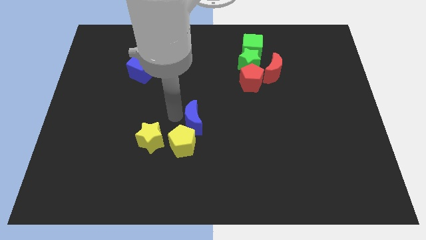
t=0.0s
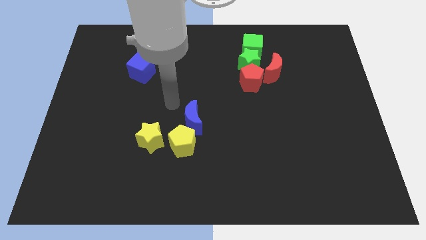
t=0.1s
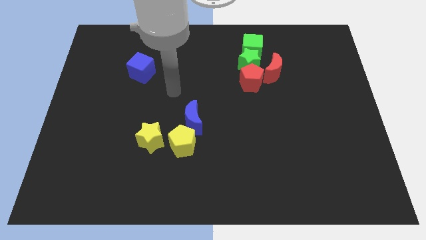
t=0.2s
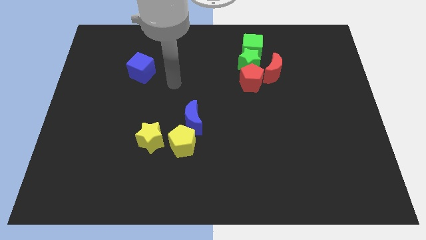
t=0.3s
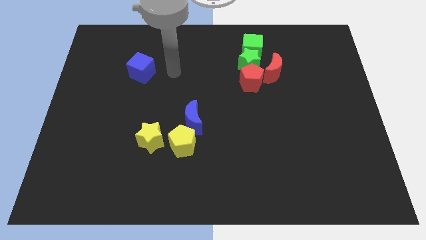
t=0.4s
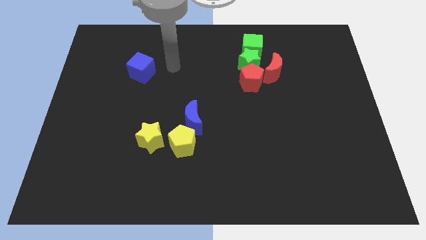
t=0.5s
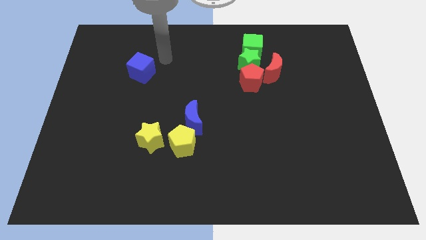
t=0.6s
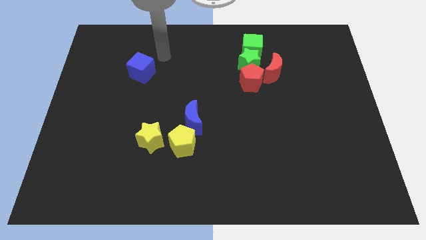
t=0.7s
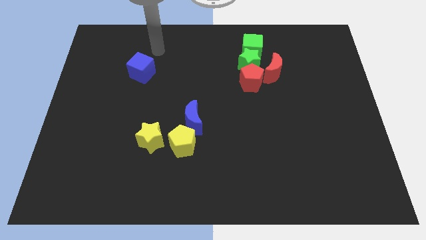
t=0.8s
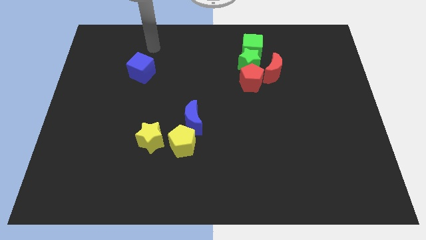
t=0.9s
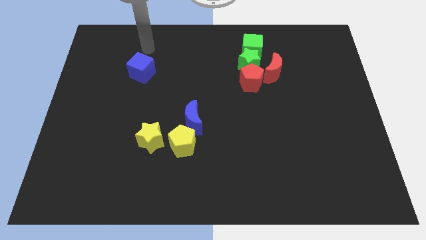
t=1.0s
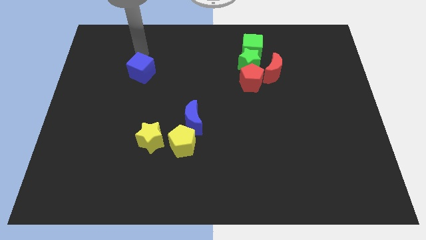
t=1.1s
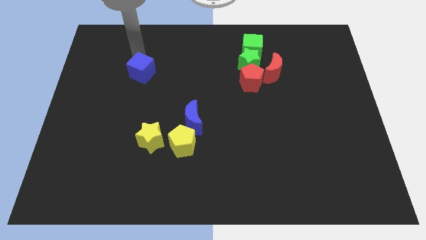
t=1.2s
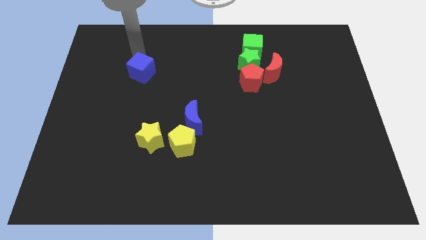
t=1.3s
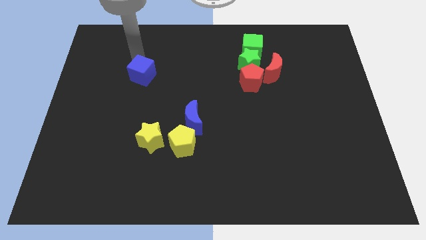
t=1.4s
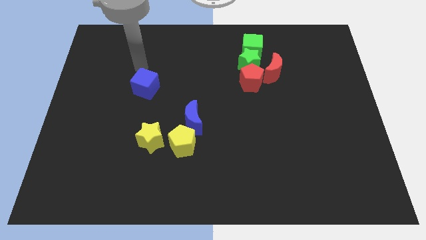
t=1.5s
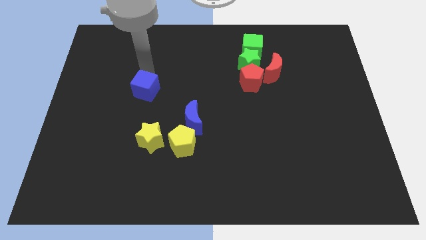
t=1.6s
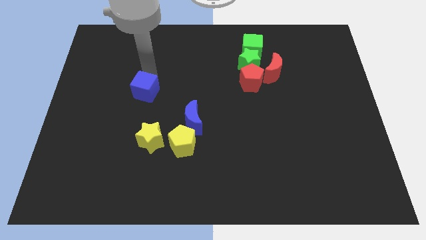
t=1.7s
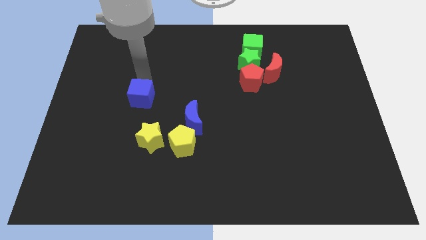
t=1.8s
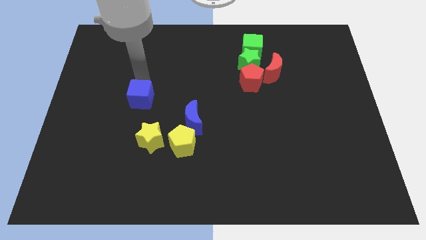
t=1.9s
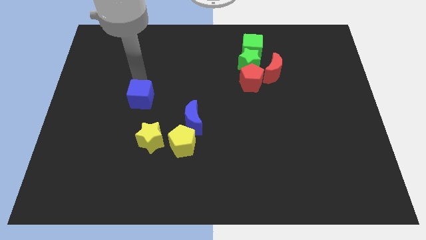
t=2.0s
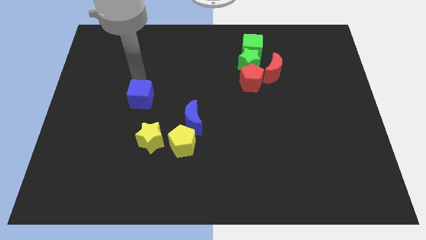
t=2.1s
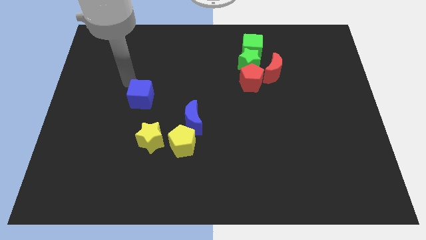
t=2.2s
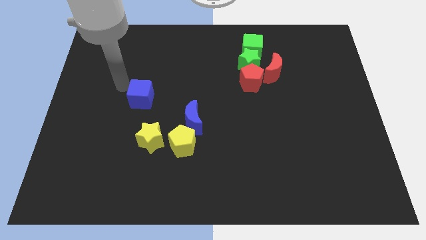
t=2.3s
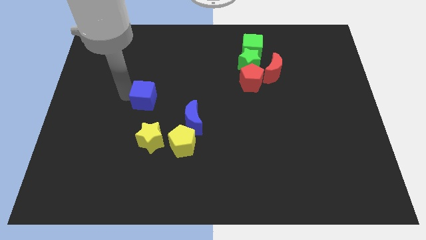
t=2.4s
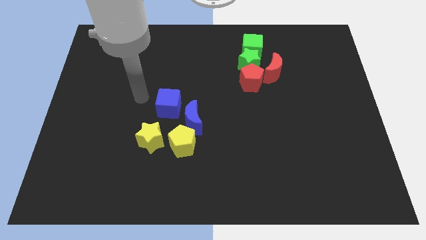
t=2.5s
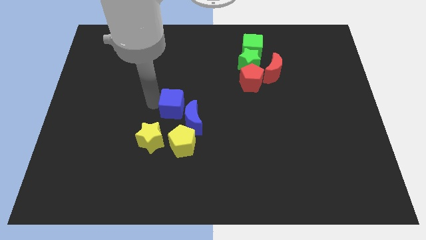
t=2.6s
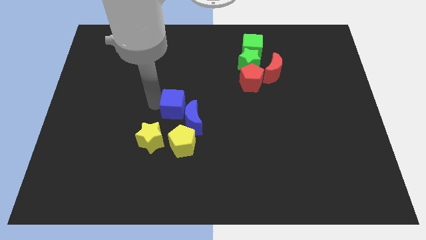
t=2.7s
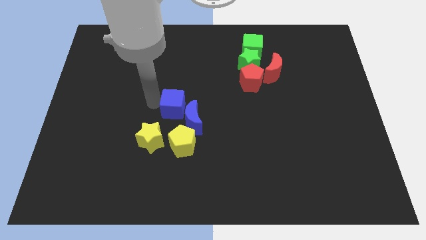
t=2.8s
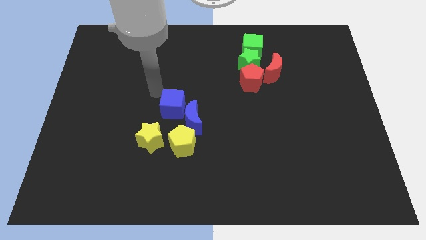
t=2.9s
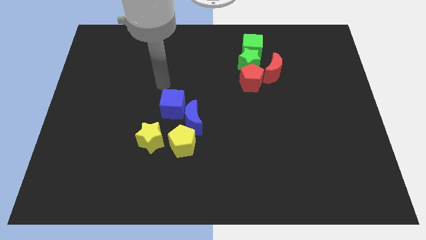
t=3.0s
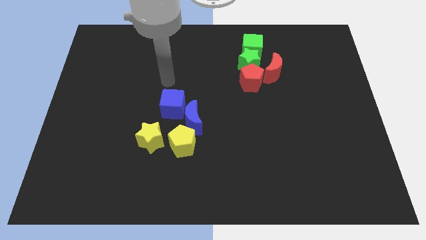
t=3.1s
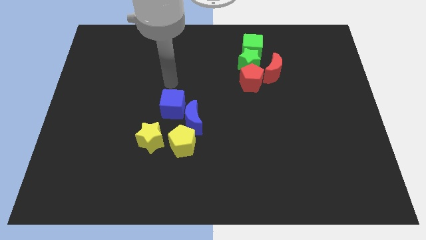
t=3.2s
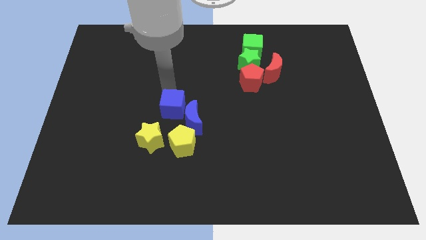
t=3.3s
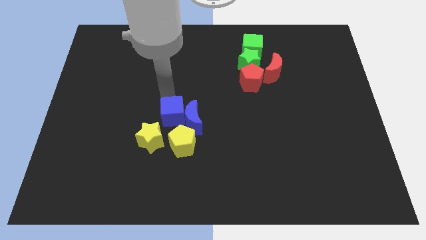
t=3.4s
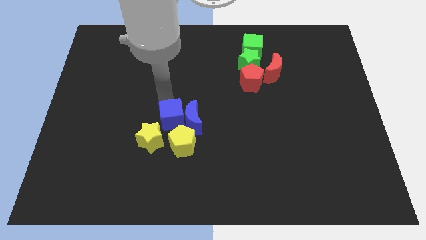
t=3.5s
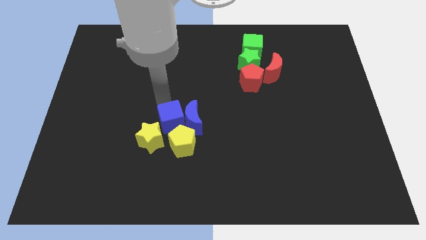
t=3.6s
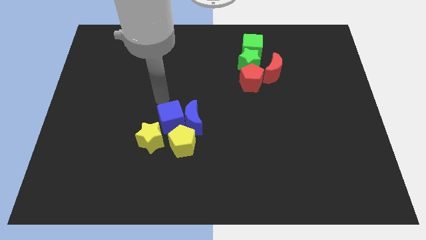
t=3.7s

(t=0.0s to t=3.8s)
place the blue cube on top of yellow pentagon

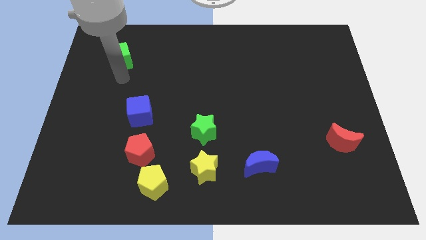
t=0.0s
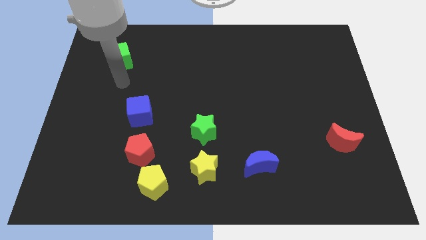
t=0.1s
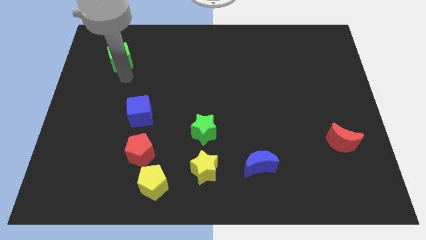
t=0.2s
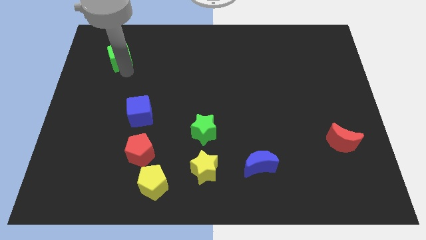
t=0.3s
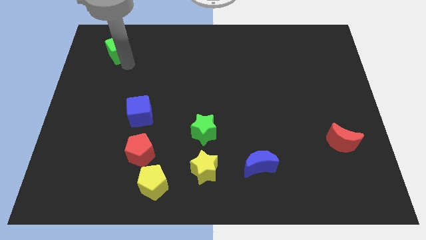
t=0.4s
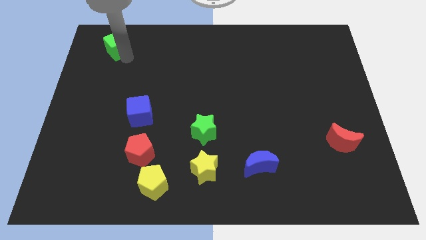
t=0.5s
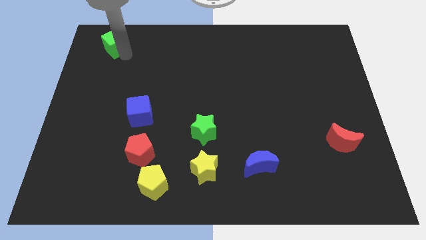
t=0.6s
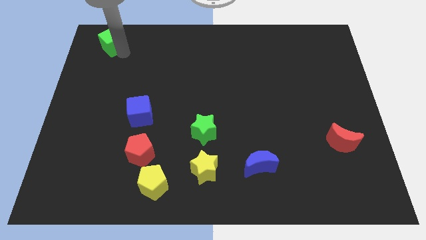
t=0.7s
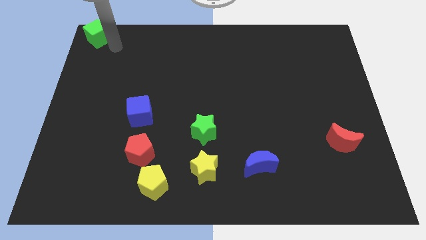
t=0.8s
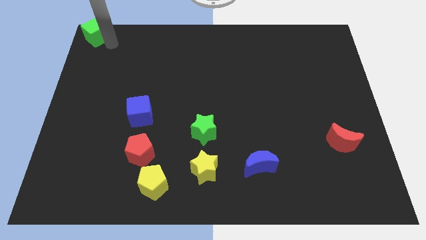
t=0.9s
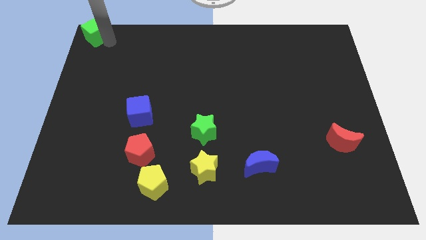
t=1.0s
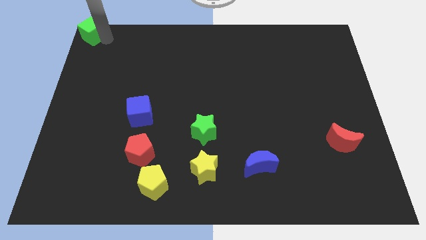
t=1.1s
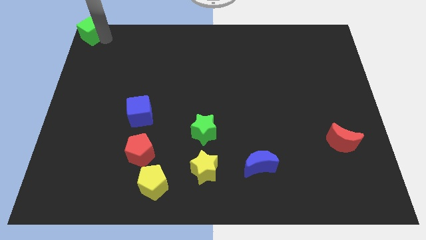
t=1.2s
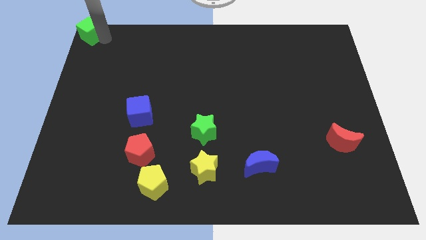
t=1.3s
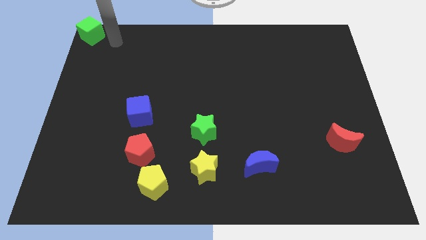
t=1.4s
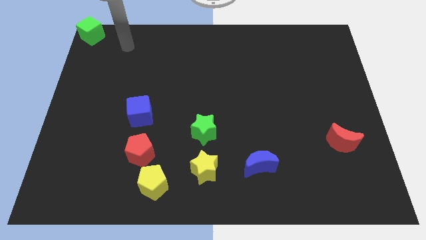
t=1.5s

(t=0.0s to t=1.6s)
push the green cube to the top left corner

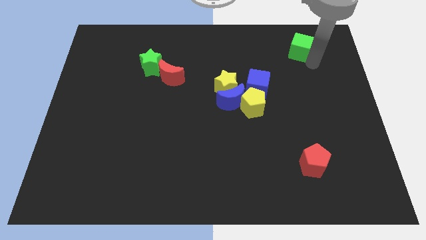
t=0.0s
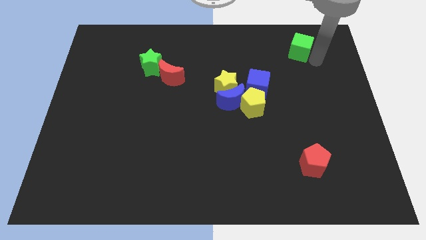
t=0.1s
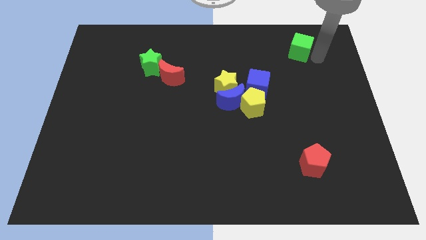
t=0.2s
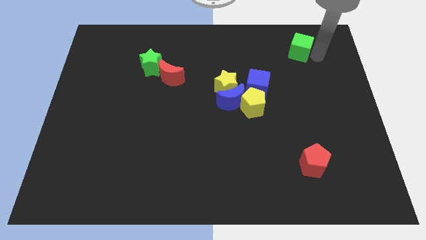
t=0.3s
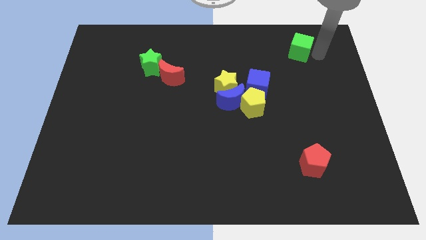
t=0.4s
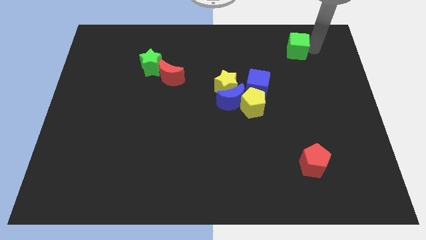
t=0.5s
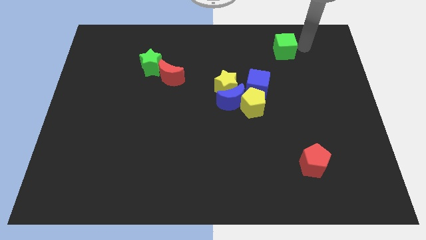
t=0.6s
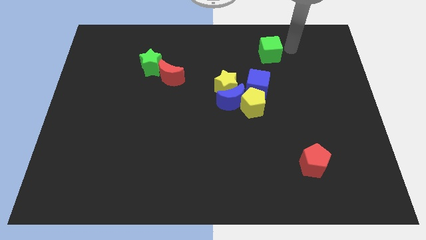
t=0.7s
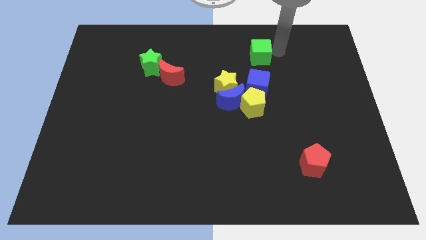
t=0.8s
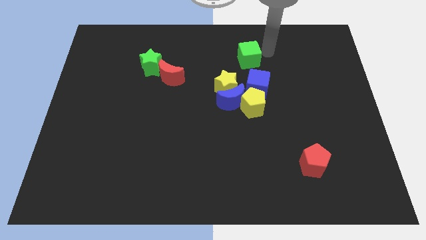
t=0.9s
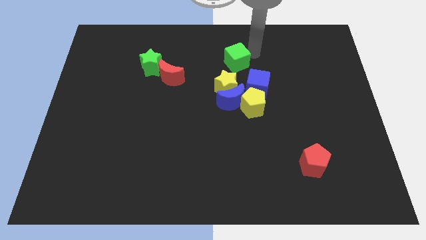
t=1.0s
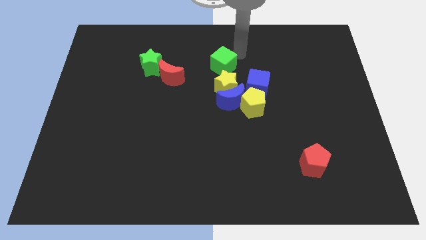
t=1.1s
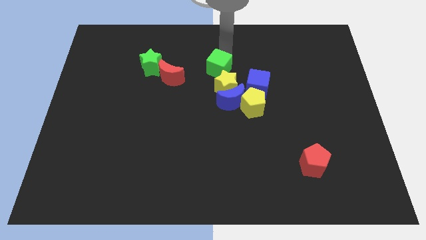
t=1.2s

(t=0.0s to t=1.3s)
move the green cube to the top of the yellow star

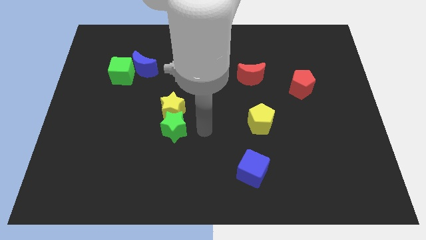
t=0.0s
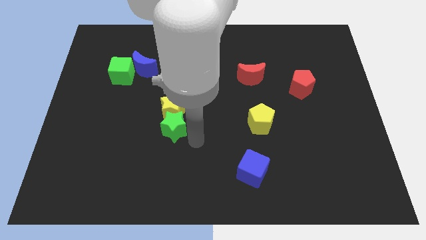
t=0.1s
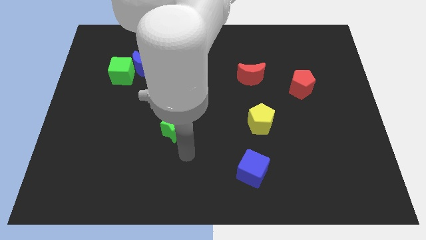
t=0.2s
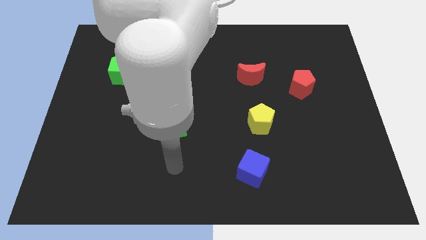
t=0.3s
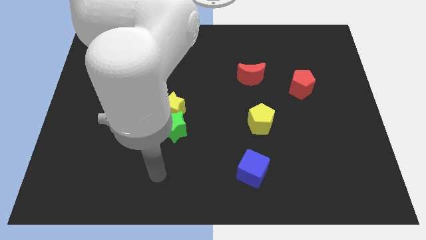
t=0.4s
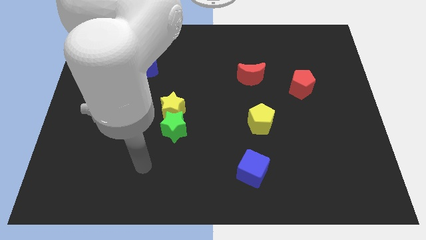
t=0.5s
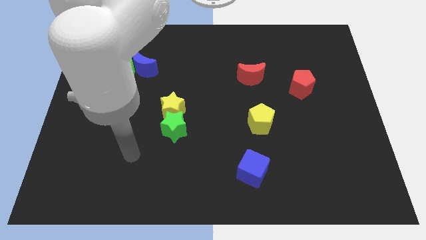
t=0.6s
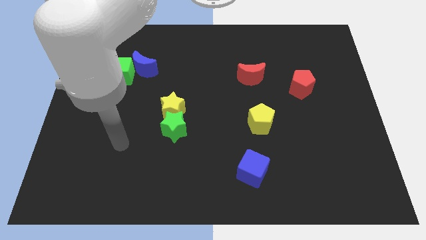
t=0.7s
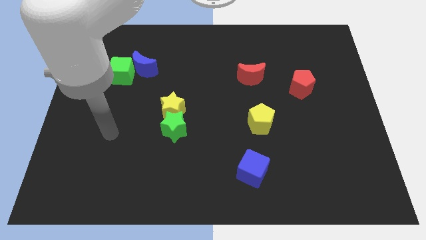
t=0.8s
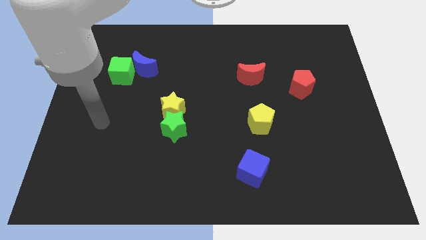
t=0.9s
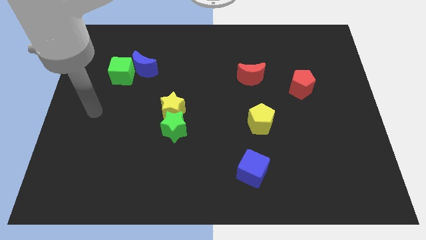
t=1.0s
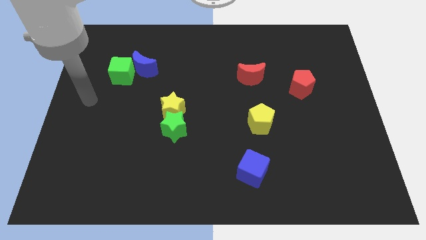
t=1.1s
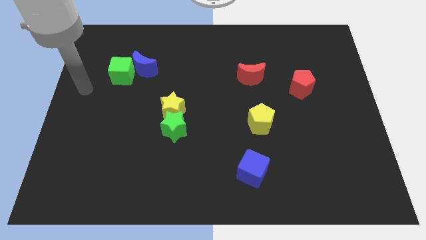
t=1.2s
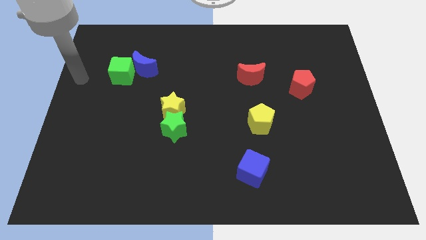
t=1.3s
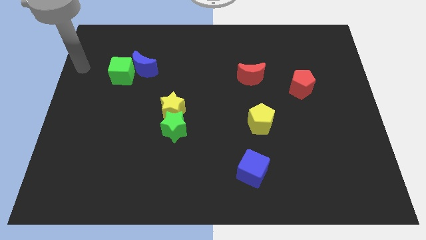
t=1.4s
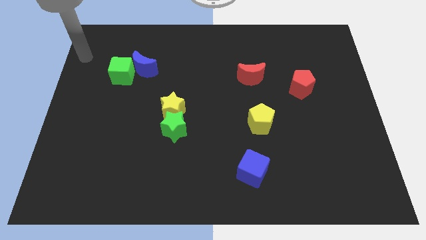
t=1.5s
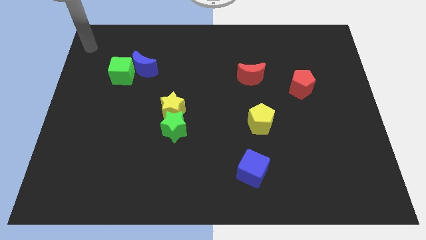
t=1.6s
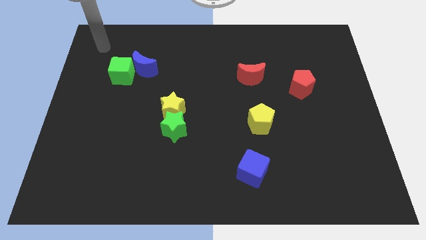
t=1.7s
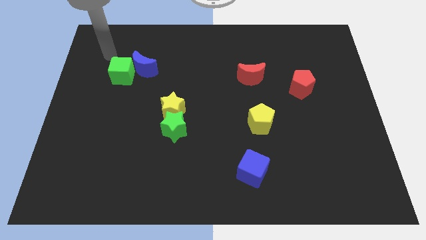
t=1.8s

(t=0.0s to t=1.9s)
point your hand at the top left side of the green cube

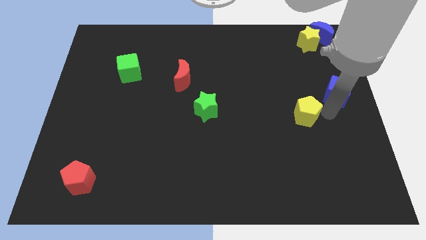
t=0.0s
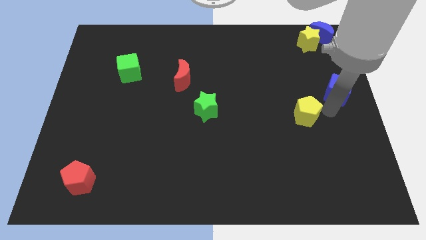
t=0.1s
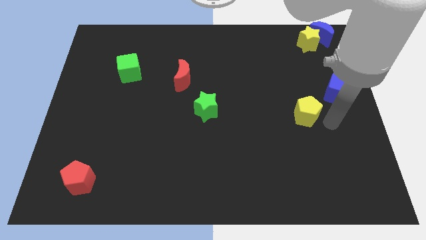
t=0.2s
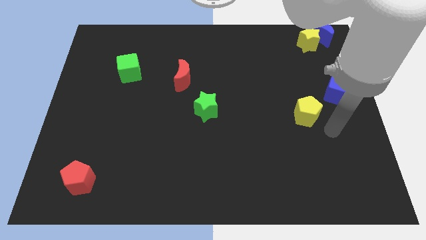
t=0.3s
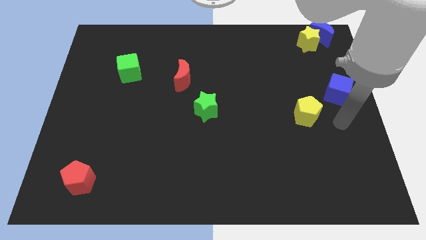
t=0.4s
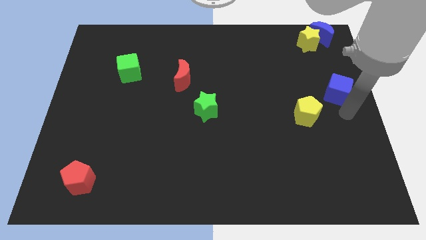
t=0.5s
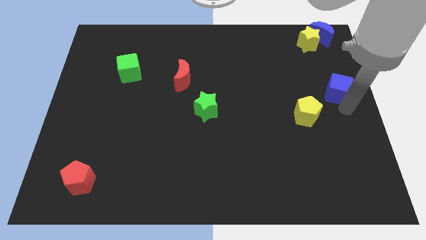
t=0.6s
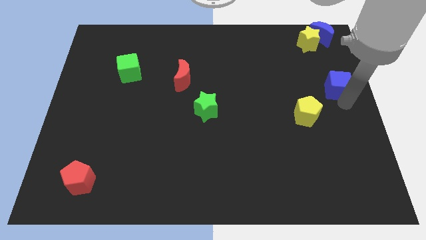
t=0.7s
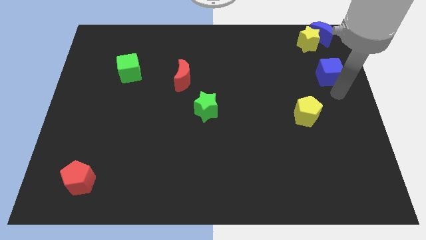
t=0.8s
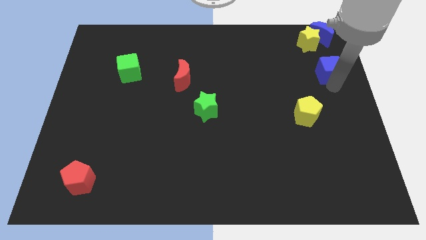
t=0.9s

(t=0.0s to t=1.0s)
push the blue cube towards top right corner
